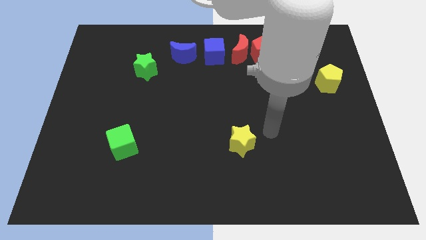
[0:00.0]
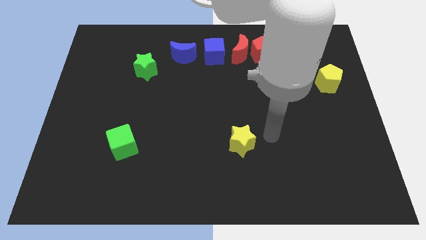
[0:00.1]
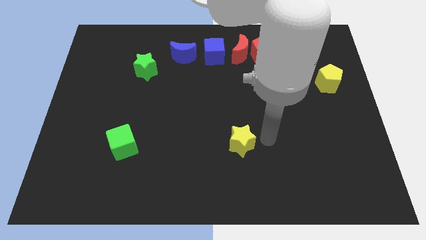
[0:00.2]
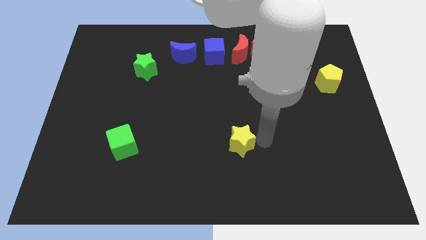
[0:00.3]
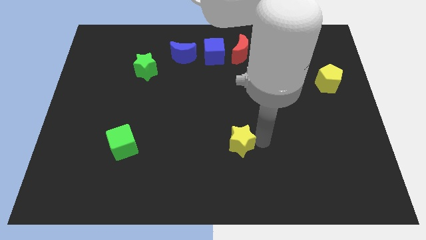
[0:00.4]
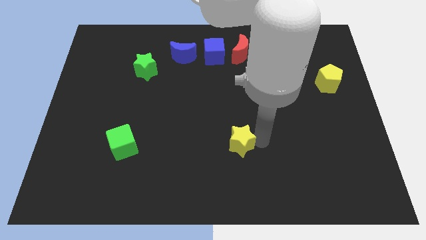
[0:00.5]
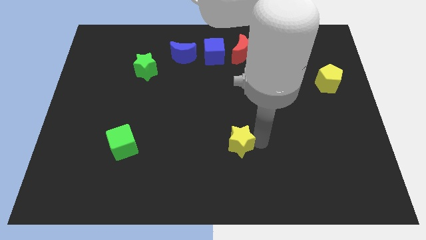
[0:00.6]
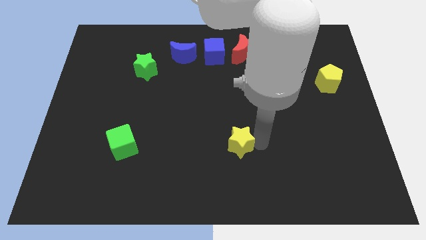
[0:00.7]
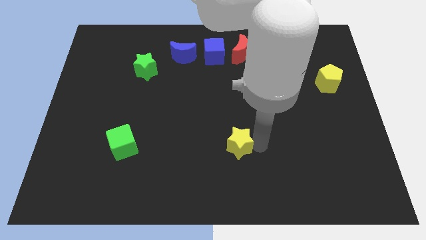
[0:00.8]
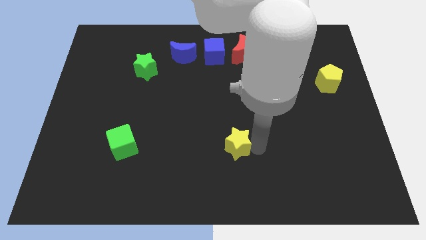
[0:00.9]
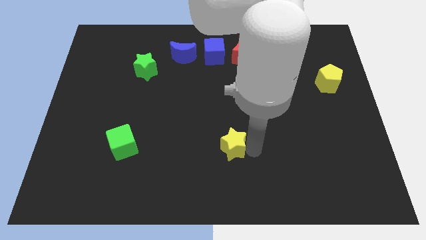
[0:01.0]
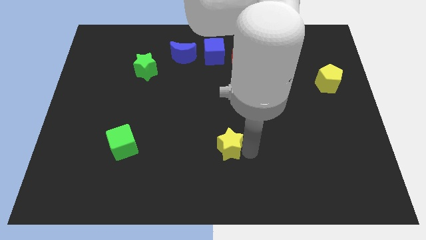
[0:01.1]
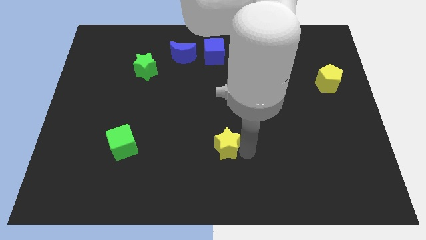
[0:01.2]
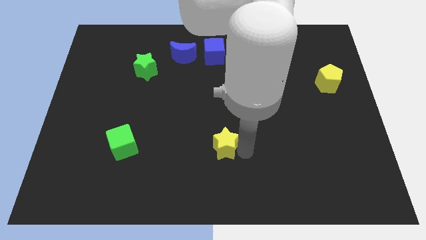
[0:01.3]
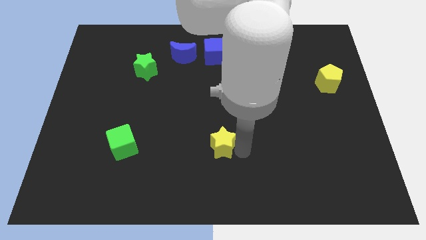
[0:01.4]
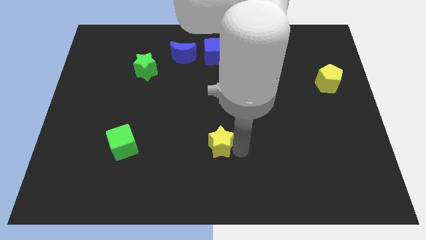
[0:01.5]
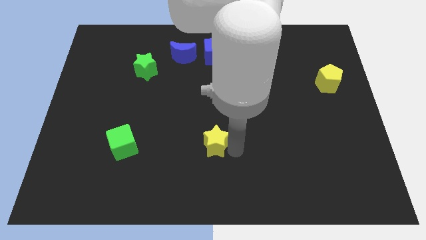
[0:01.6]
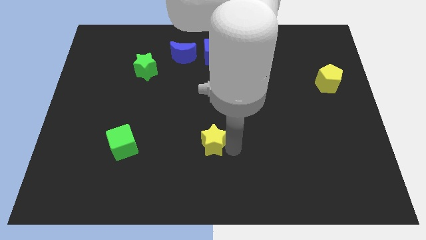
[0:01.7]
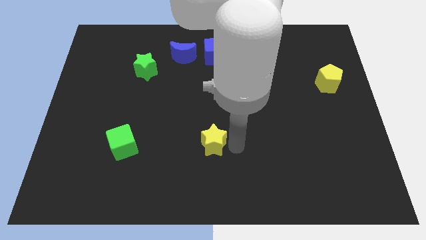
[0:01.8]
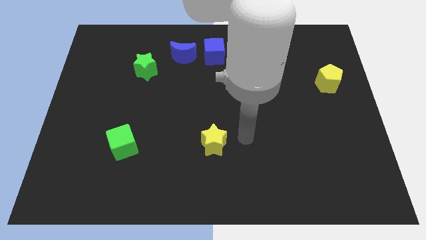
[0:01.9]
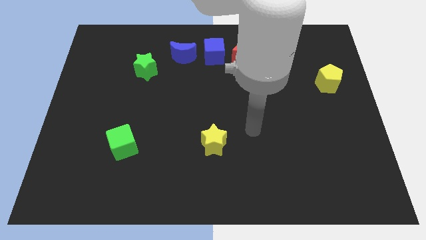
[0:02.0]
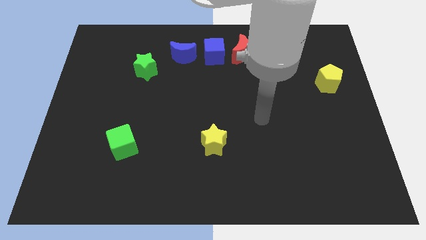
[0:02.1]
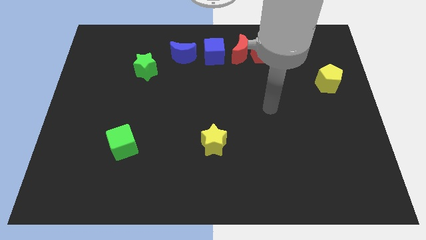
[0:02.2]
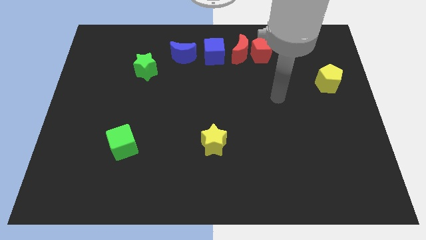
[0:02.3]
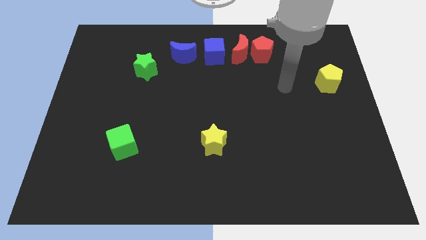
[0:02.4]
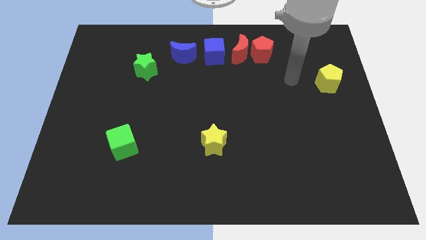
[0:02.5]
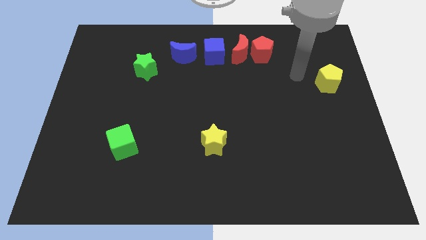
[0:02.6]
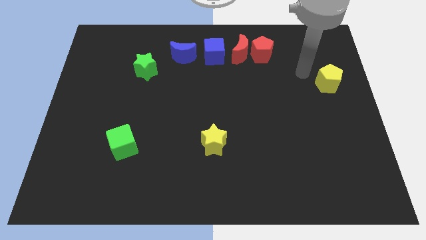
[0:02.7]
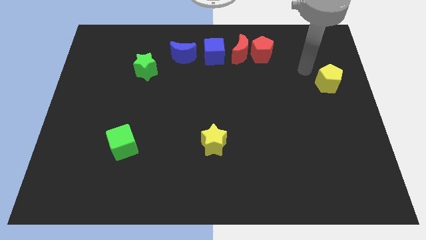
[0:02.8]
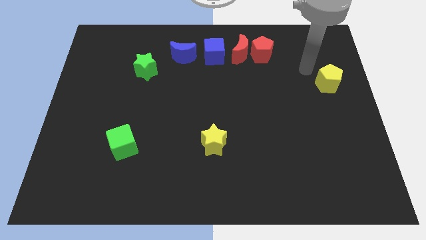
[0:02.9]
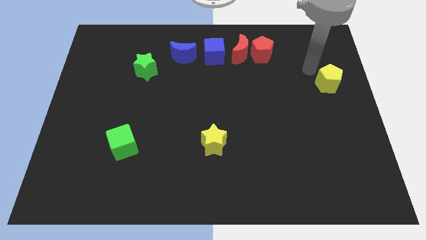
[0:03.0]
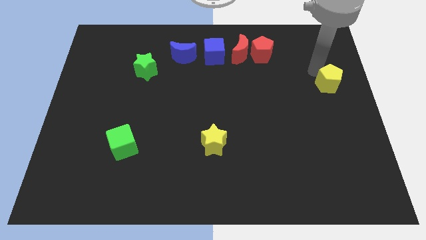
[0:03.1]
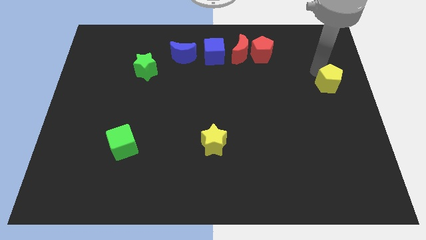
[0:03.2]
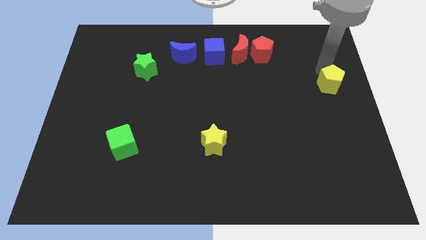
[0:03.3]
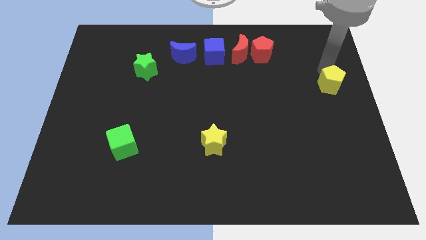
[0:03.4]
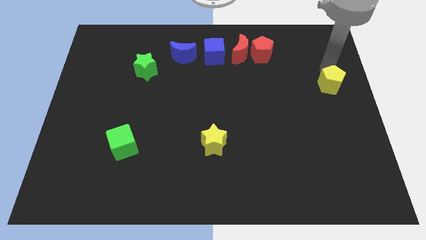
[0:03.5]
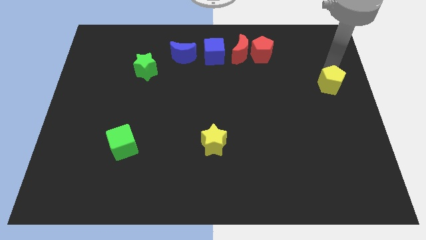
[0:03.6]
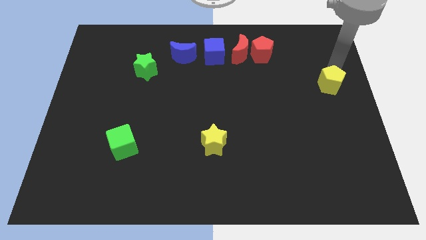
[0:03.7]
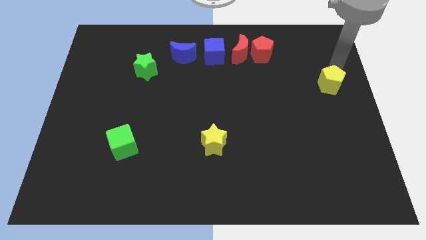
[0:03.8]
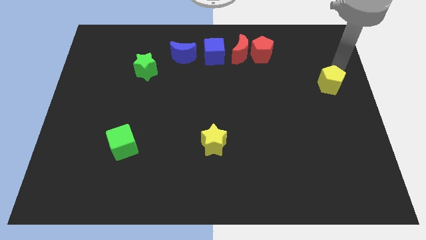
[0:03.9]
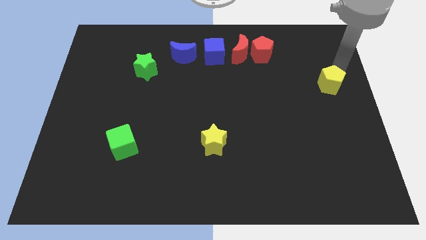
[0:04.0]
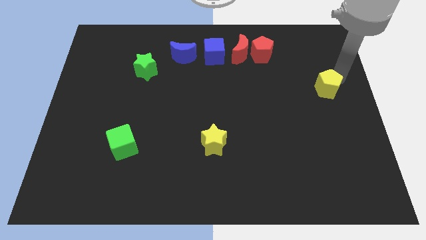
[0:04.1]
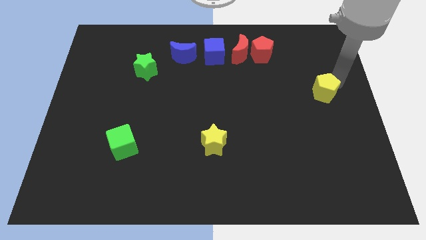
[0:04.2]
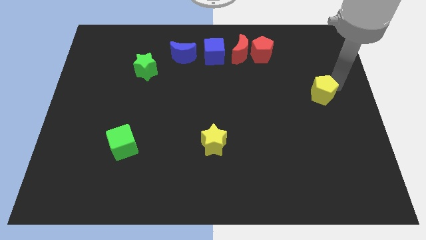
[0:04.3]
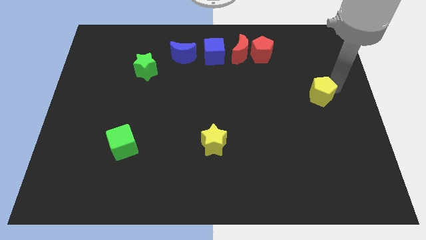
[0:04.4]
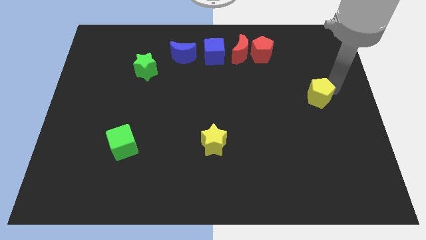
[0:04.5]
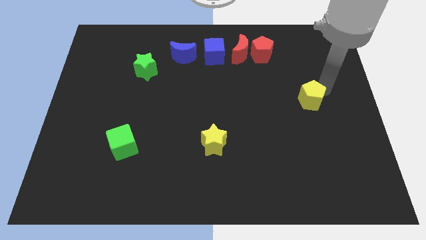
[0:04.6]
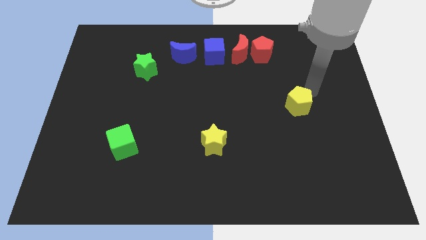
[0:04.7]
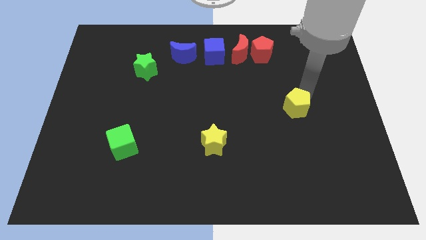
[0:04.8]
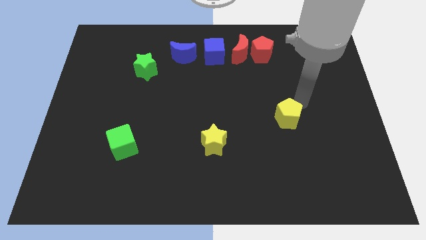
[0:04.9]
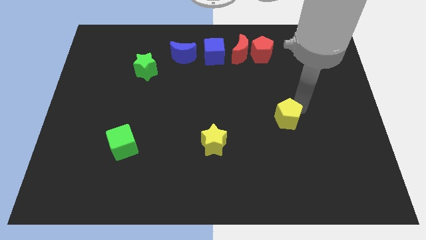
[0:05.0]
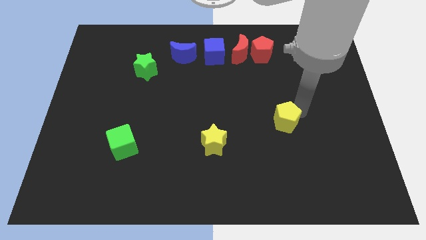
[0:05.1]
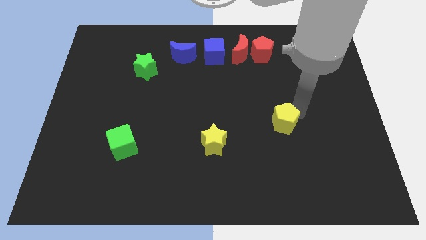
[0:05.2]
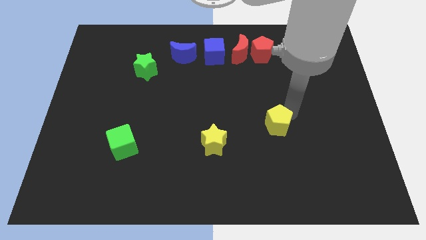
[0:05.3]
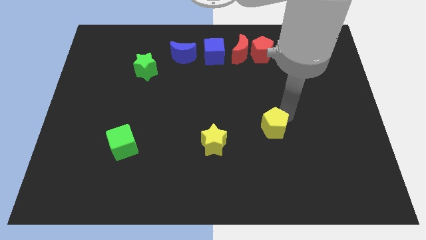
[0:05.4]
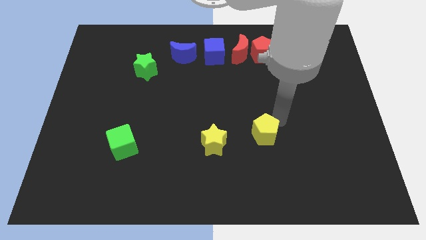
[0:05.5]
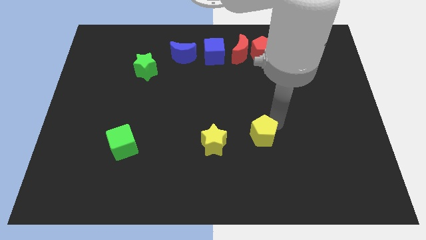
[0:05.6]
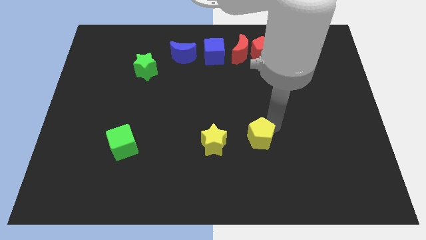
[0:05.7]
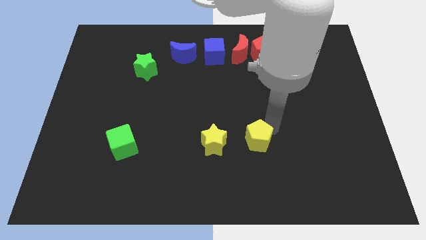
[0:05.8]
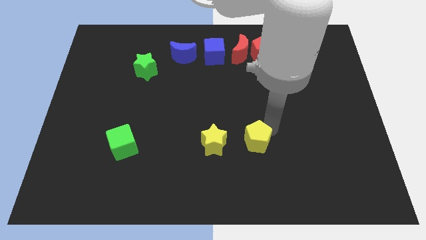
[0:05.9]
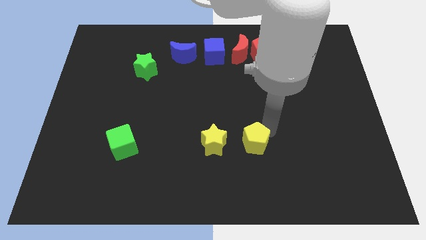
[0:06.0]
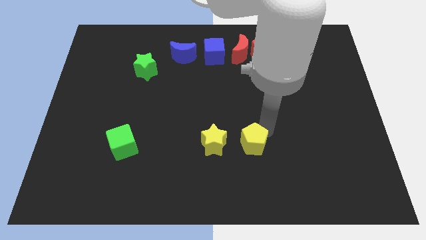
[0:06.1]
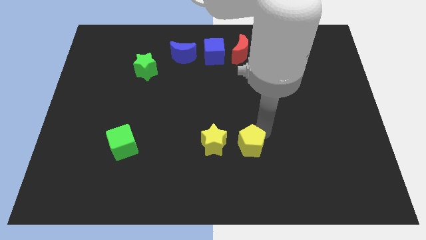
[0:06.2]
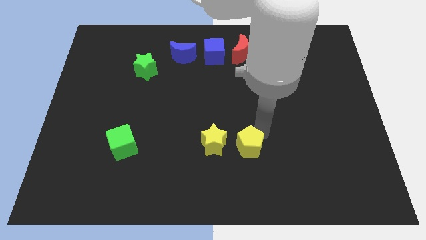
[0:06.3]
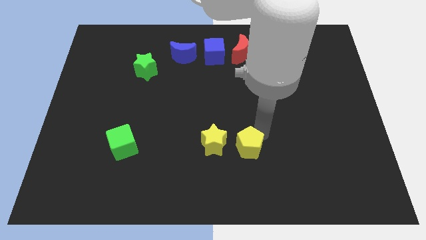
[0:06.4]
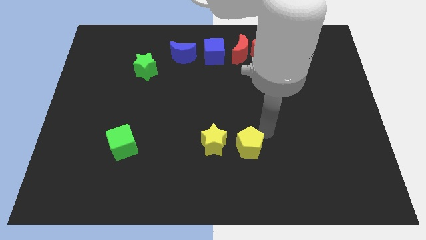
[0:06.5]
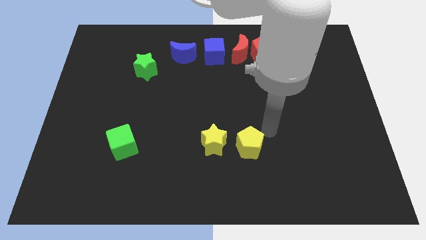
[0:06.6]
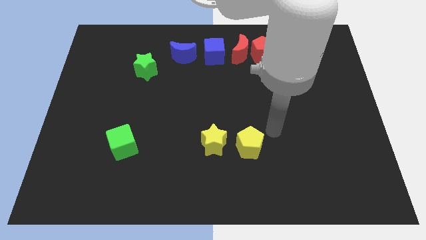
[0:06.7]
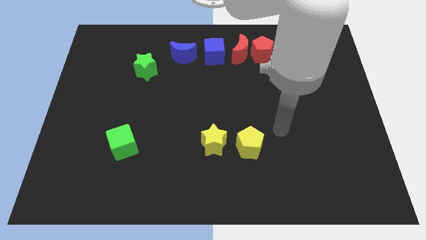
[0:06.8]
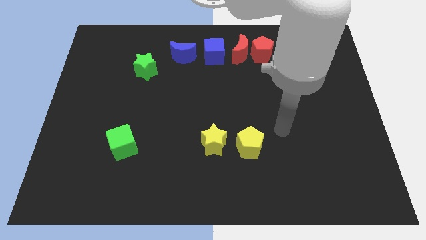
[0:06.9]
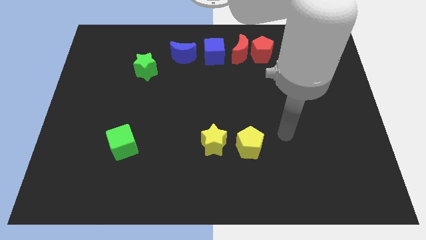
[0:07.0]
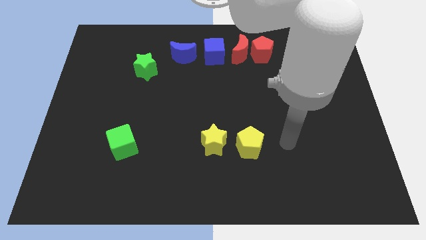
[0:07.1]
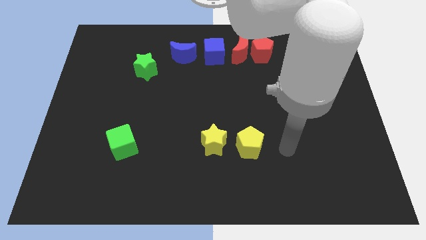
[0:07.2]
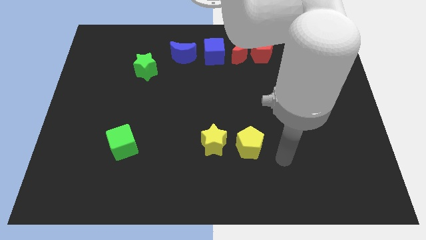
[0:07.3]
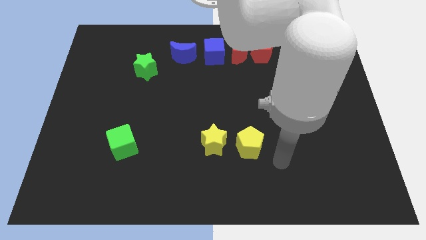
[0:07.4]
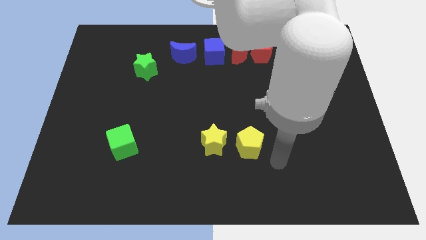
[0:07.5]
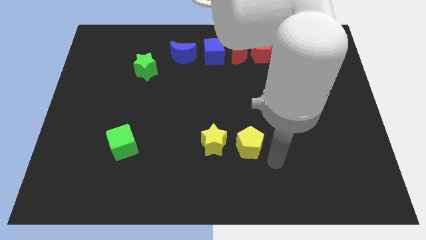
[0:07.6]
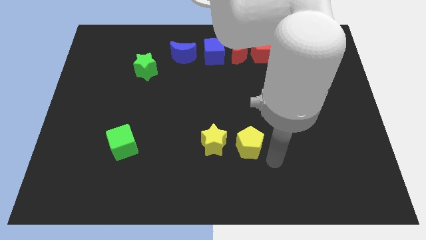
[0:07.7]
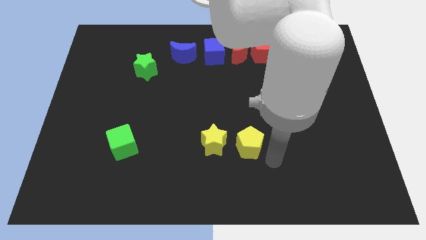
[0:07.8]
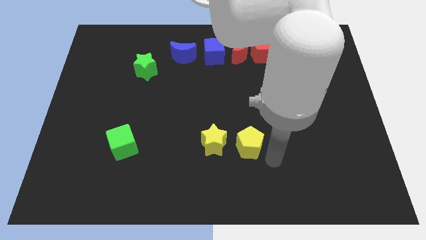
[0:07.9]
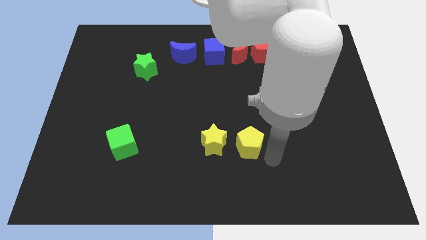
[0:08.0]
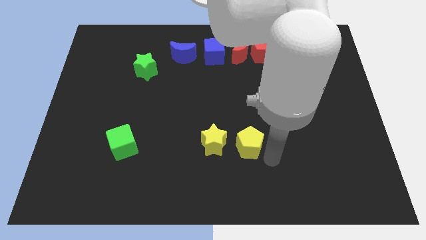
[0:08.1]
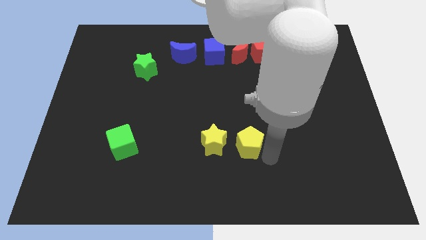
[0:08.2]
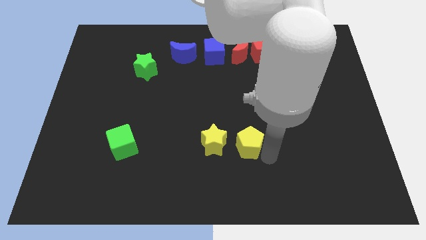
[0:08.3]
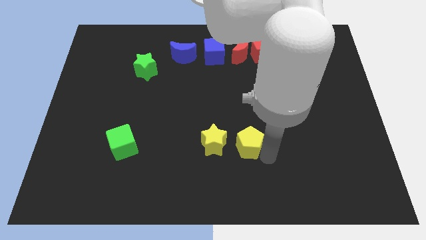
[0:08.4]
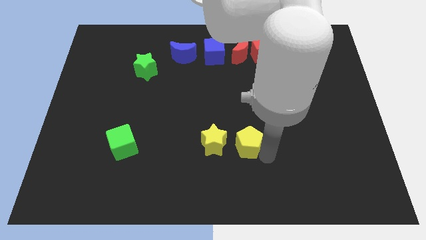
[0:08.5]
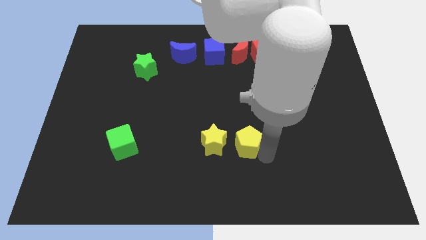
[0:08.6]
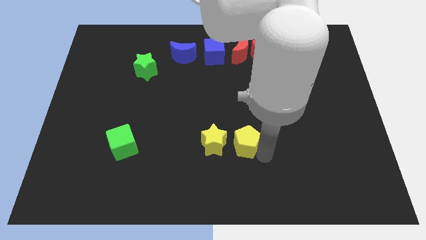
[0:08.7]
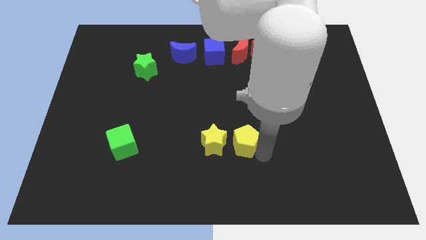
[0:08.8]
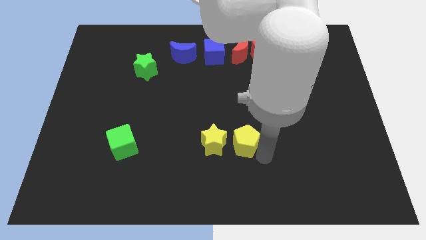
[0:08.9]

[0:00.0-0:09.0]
move the yellow pentagon towards the yellow star
